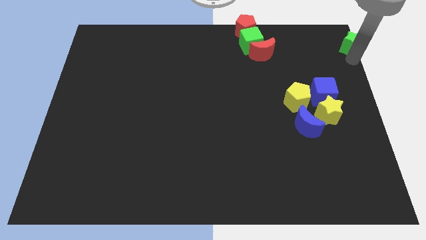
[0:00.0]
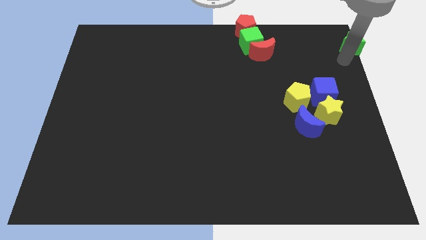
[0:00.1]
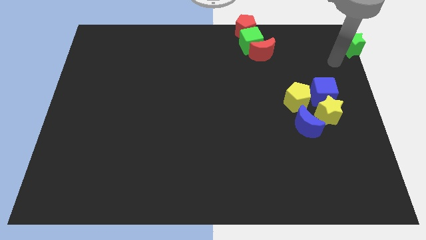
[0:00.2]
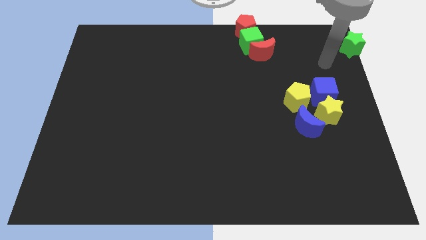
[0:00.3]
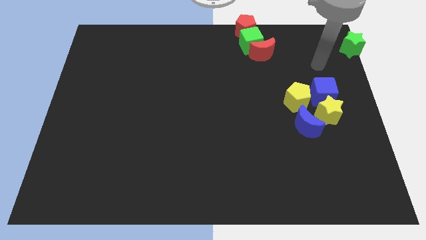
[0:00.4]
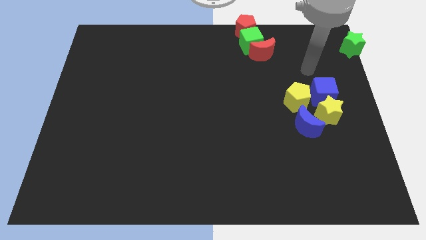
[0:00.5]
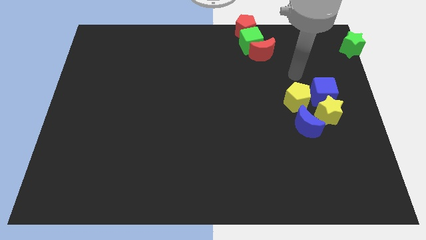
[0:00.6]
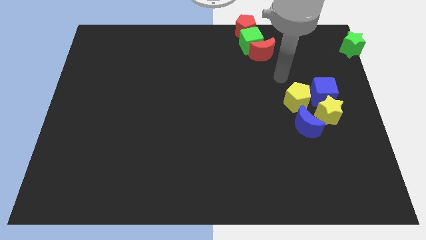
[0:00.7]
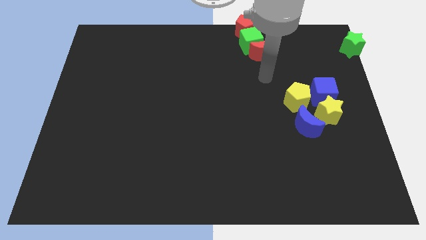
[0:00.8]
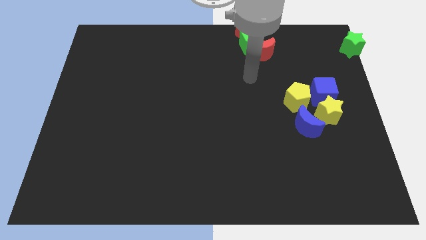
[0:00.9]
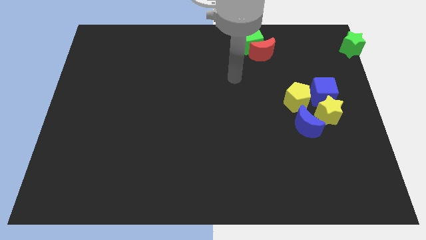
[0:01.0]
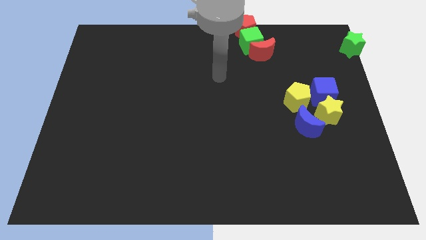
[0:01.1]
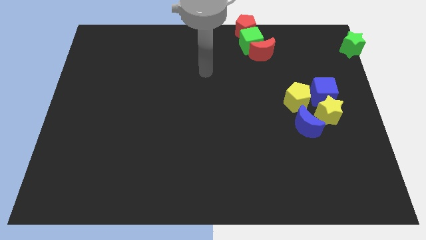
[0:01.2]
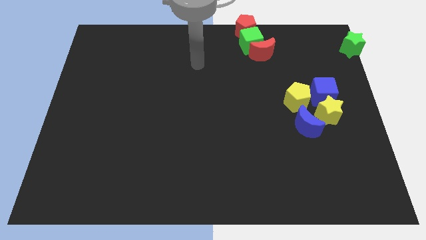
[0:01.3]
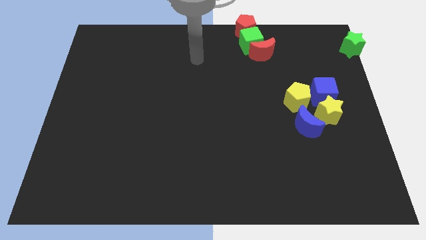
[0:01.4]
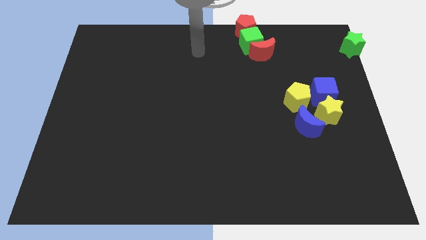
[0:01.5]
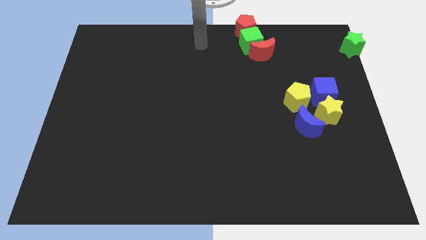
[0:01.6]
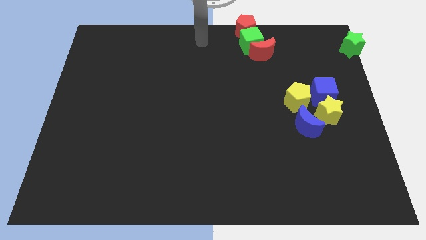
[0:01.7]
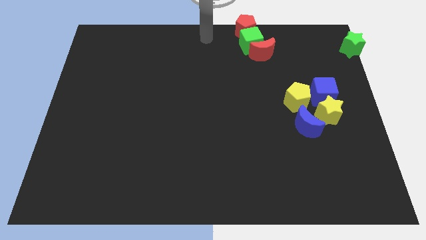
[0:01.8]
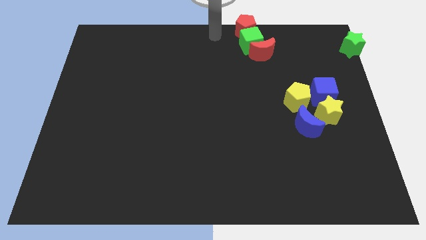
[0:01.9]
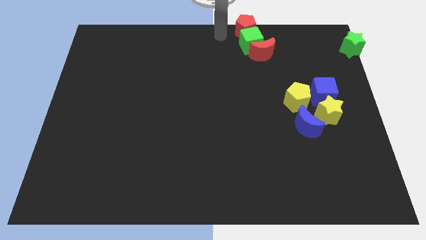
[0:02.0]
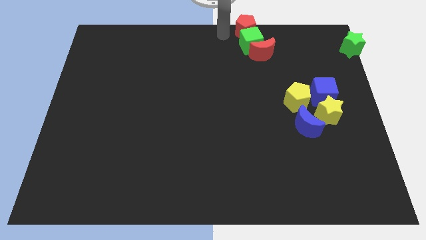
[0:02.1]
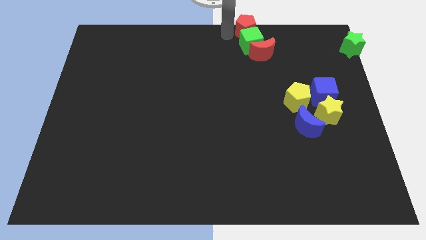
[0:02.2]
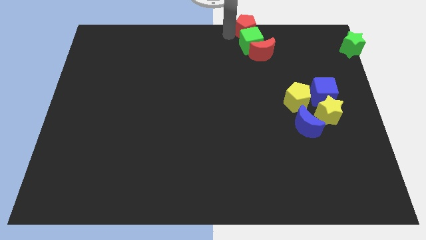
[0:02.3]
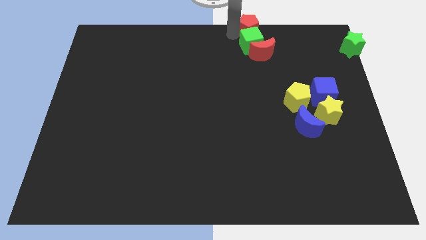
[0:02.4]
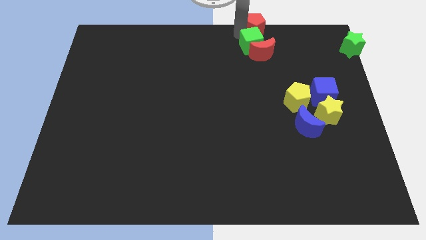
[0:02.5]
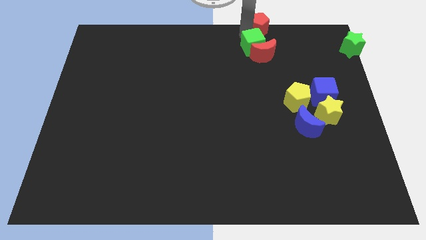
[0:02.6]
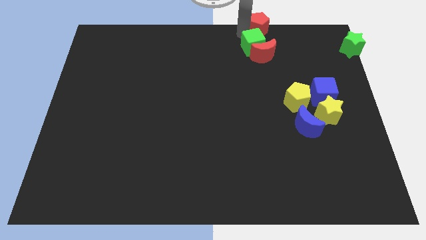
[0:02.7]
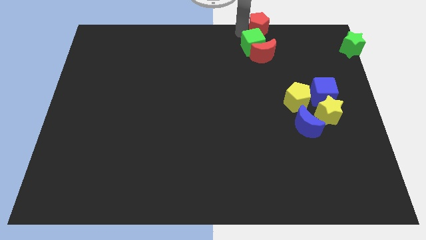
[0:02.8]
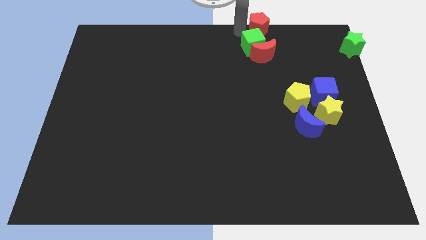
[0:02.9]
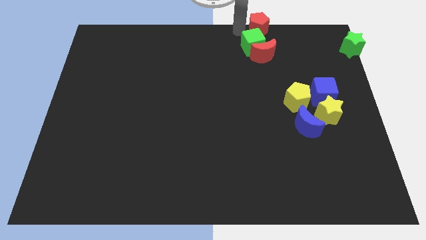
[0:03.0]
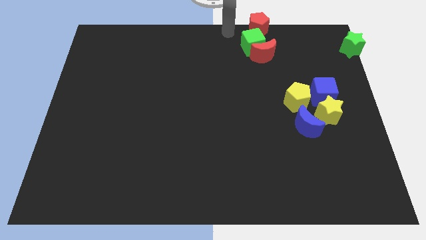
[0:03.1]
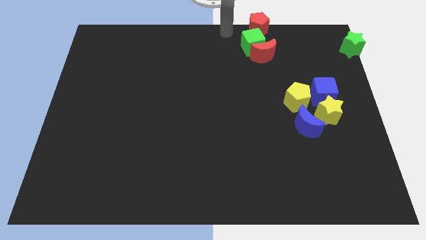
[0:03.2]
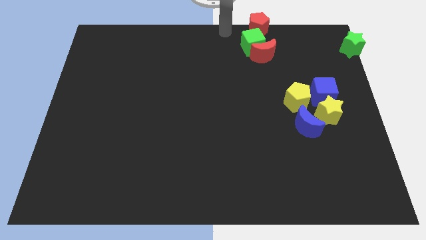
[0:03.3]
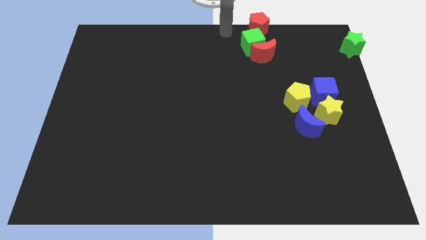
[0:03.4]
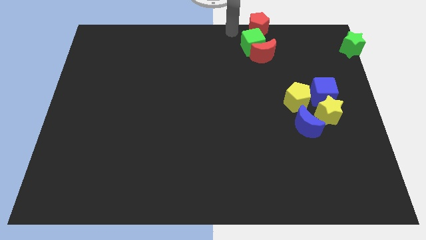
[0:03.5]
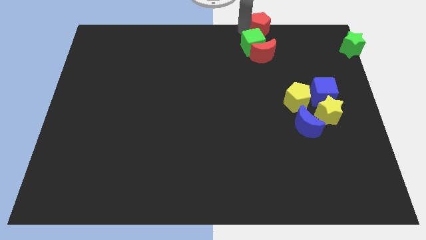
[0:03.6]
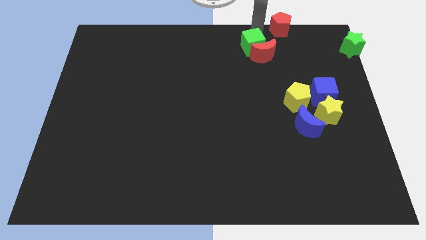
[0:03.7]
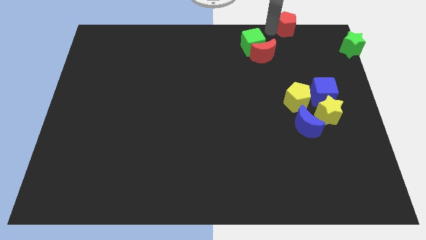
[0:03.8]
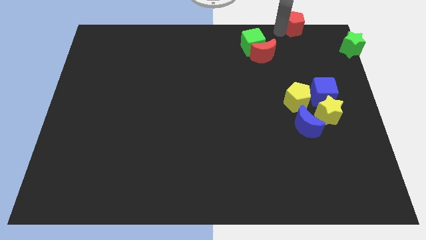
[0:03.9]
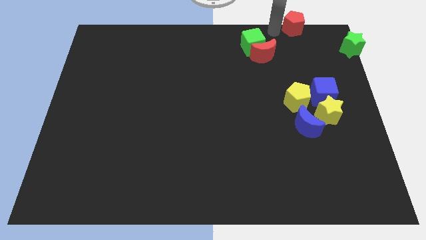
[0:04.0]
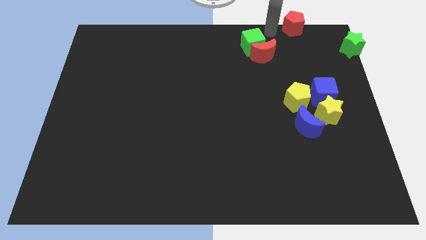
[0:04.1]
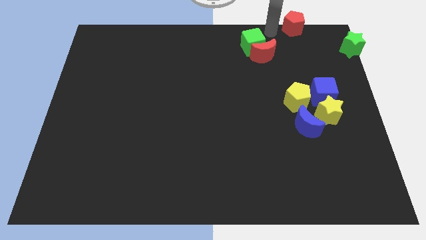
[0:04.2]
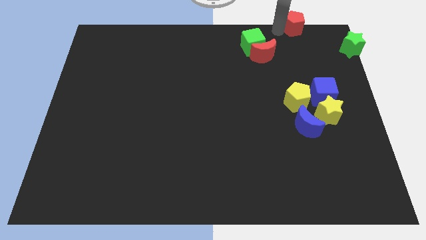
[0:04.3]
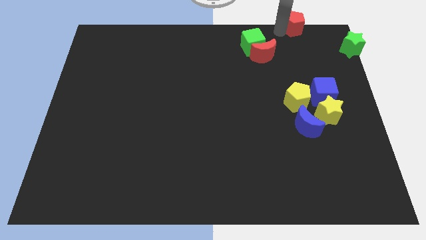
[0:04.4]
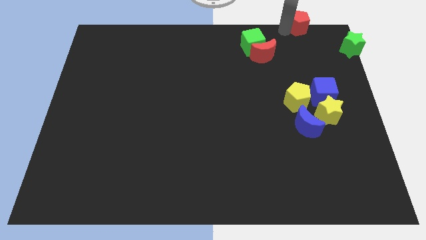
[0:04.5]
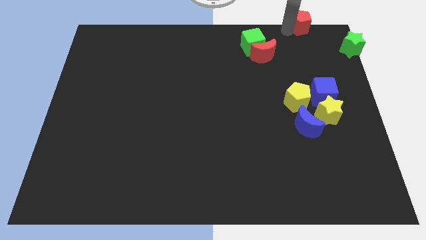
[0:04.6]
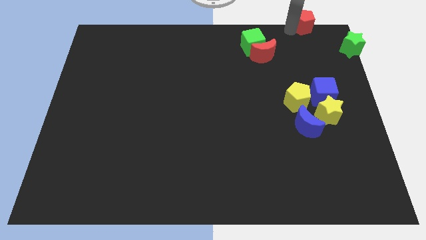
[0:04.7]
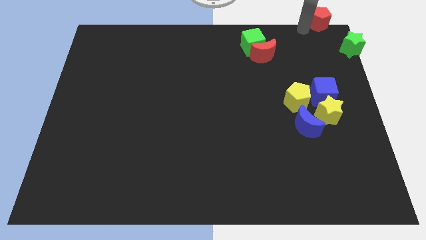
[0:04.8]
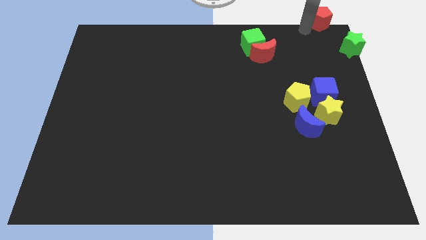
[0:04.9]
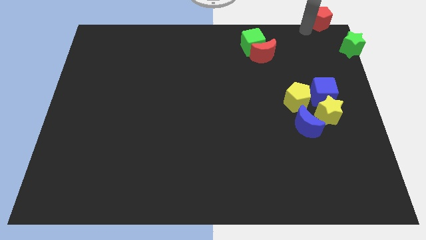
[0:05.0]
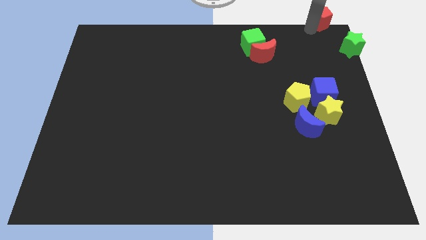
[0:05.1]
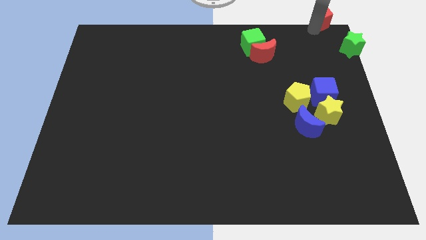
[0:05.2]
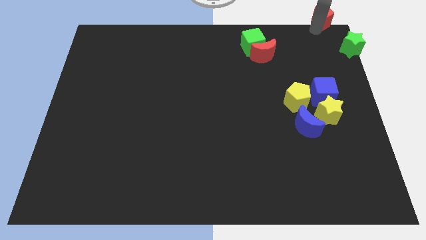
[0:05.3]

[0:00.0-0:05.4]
push the red pentagon to the top right corner of the board

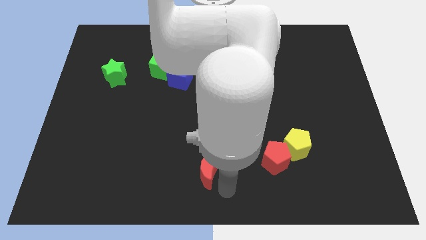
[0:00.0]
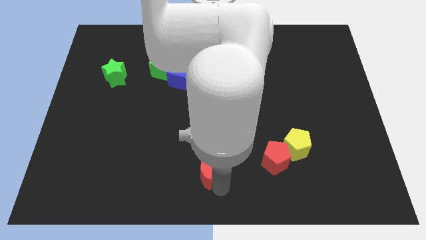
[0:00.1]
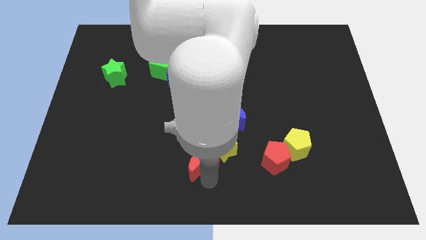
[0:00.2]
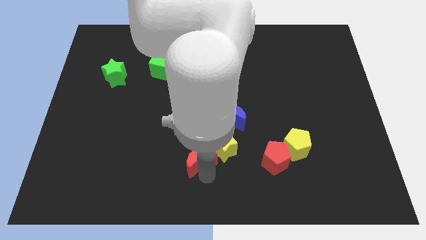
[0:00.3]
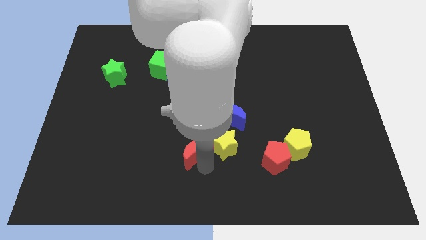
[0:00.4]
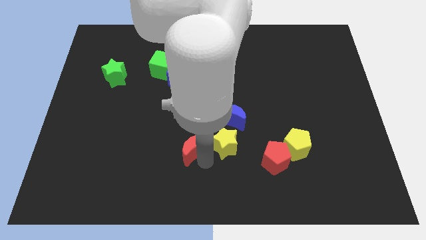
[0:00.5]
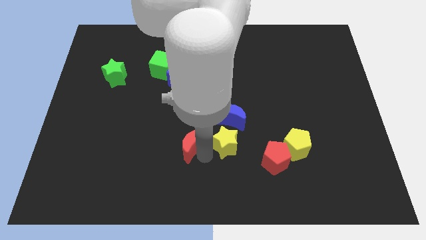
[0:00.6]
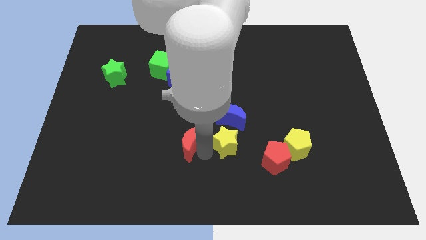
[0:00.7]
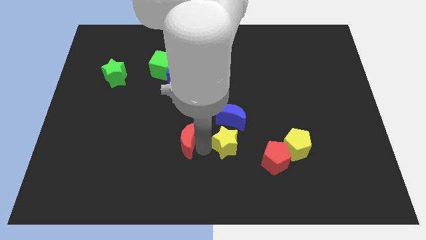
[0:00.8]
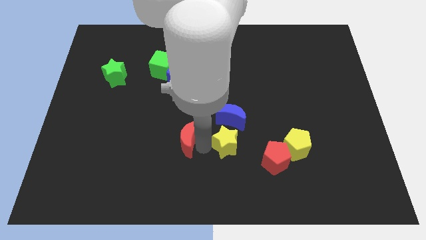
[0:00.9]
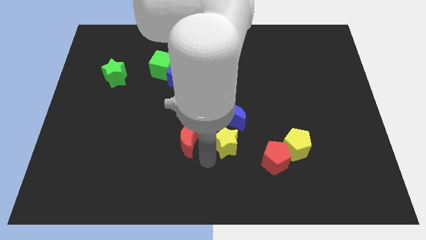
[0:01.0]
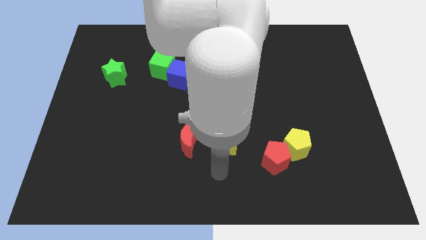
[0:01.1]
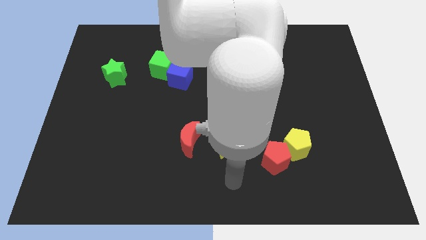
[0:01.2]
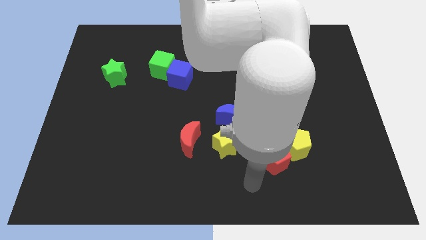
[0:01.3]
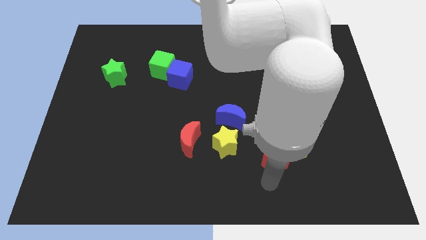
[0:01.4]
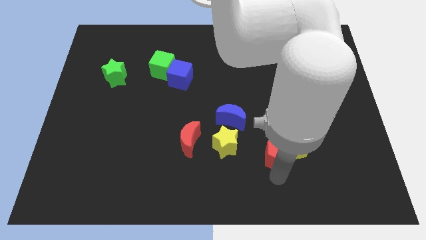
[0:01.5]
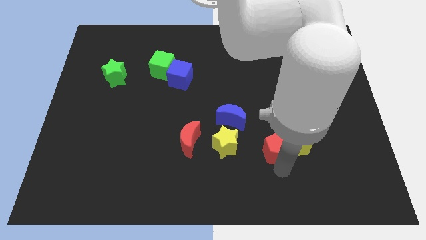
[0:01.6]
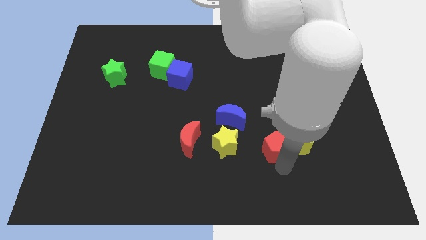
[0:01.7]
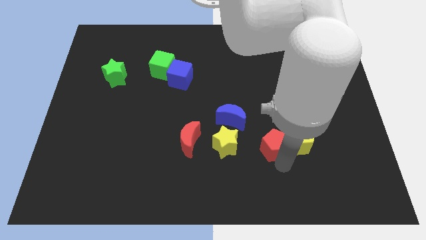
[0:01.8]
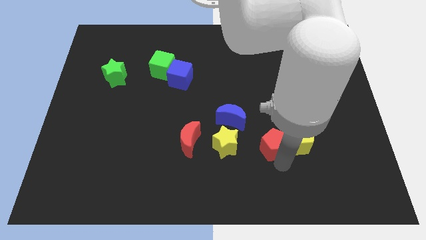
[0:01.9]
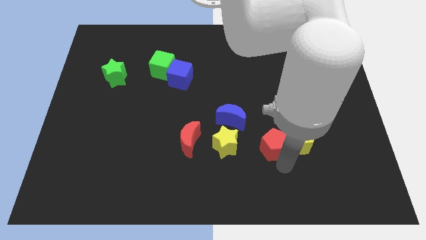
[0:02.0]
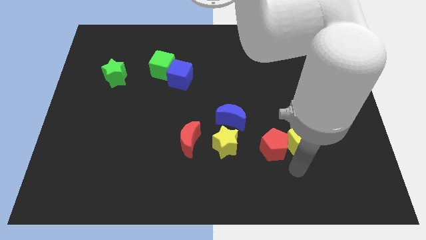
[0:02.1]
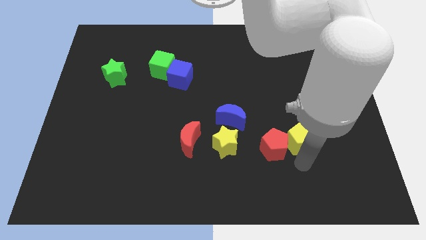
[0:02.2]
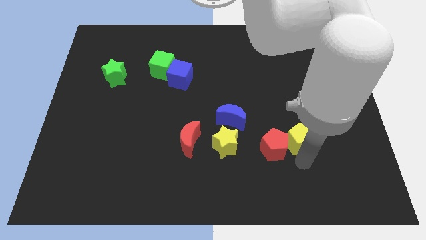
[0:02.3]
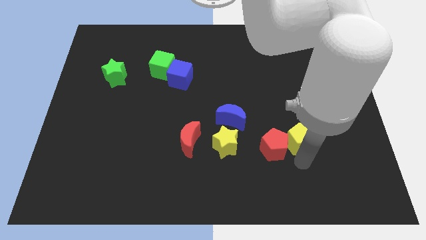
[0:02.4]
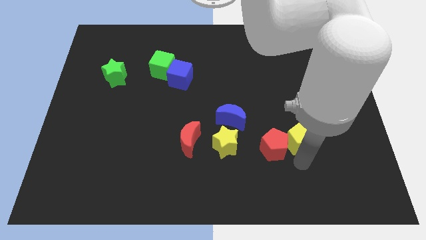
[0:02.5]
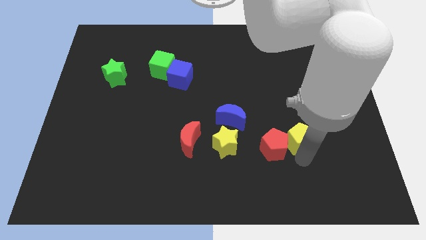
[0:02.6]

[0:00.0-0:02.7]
push blue moon beside yellow star

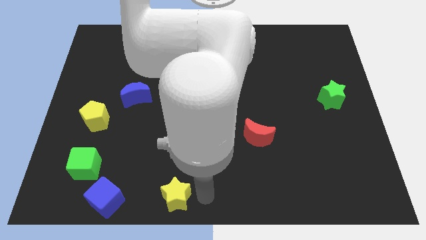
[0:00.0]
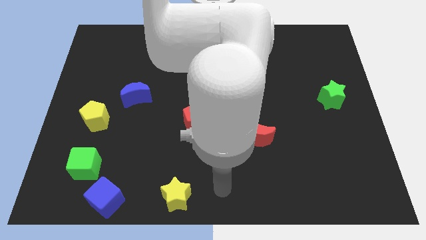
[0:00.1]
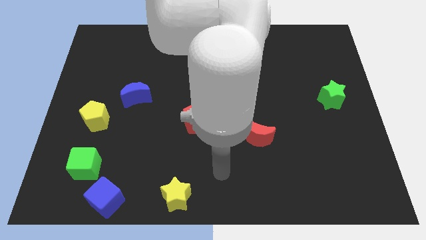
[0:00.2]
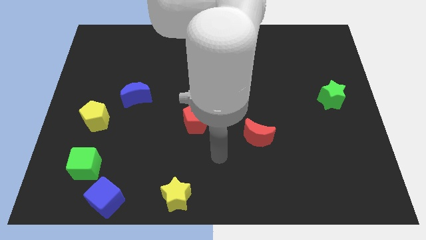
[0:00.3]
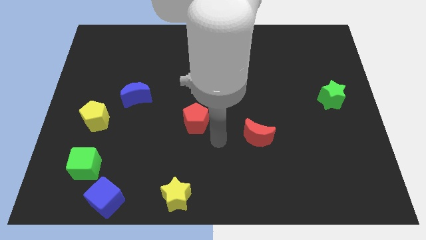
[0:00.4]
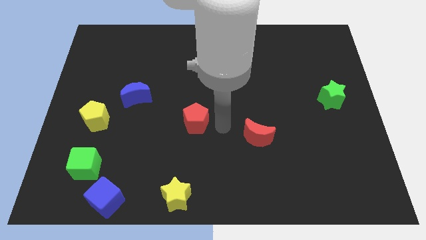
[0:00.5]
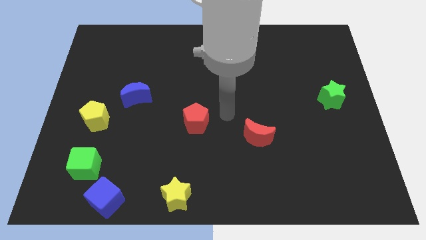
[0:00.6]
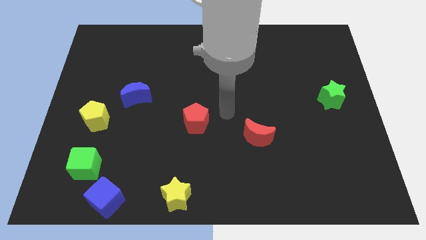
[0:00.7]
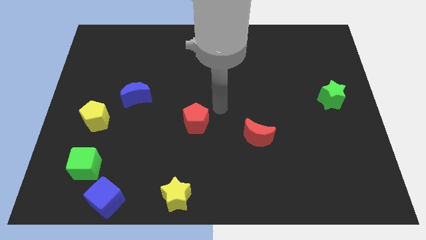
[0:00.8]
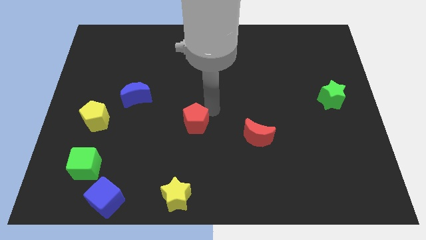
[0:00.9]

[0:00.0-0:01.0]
move the arm towards the red pentagon
